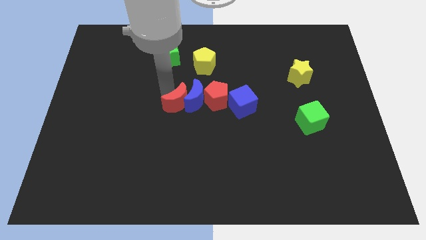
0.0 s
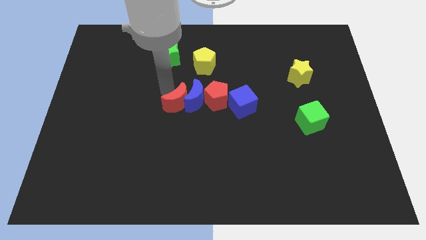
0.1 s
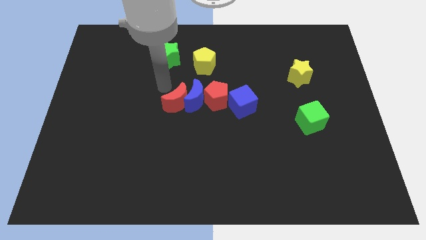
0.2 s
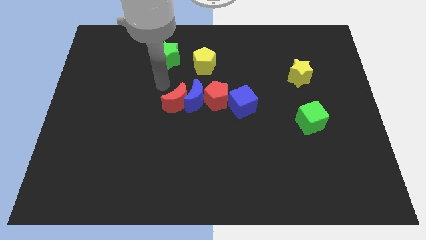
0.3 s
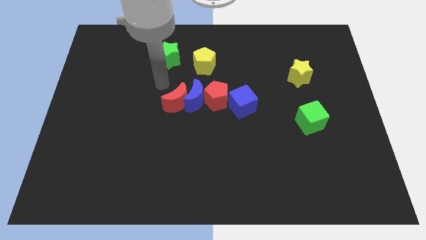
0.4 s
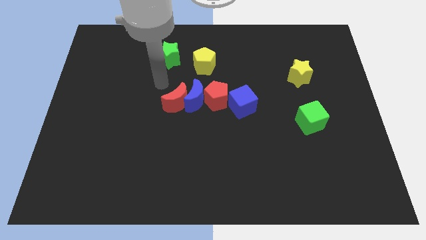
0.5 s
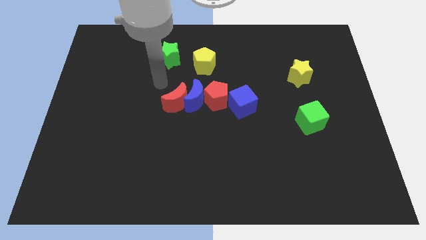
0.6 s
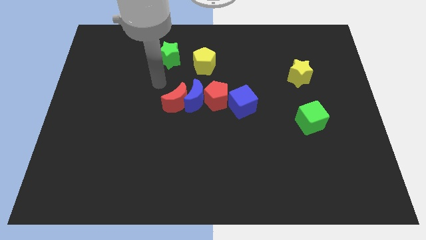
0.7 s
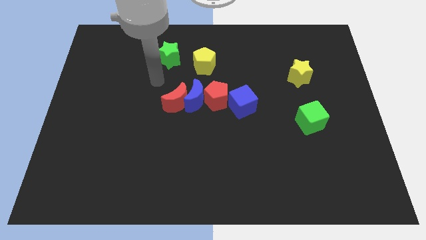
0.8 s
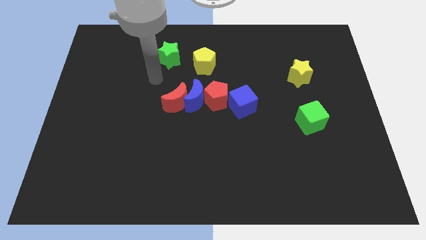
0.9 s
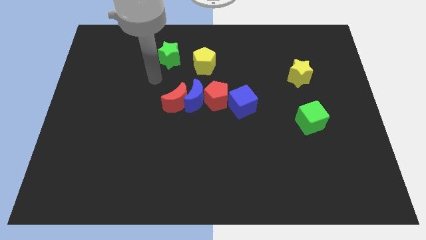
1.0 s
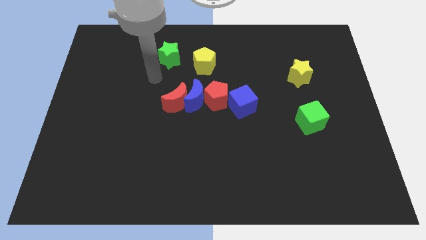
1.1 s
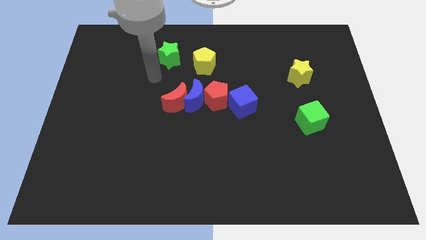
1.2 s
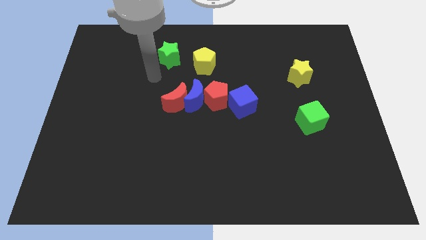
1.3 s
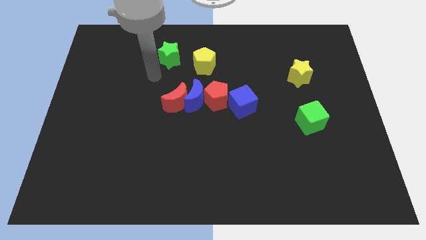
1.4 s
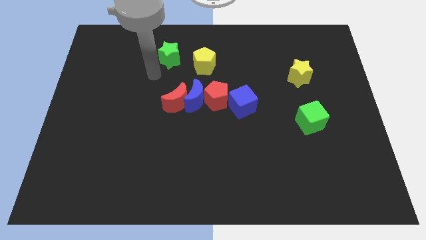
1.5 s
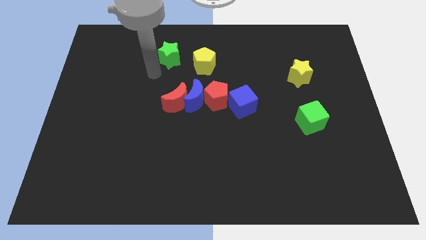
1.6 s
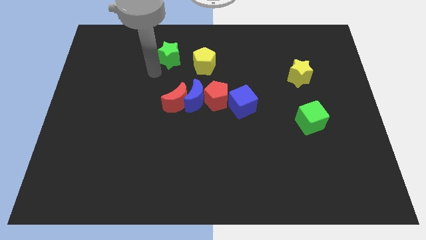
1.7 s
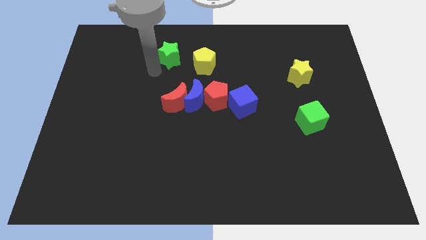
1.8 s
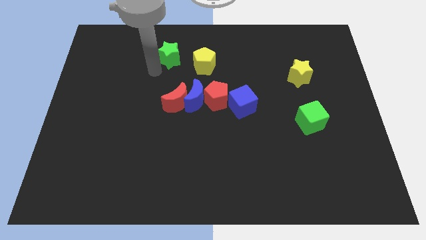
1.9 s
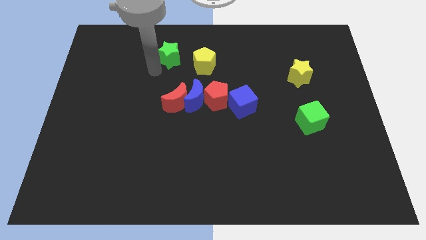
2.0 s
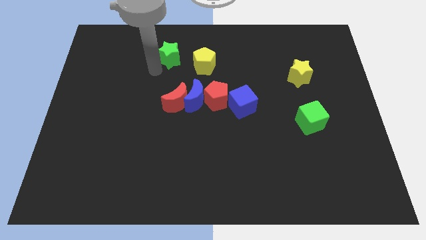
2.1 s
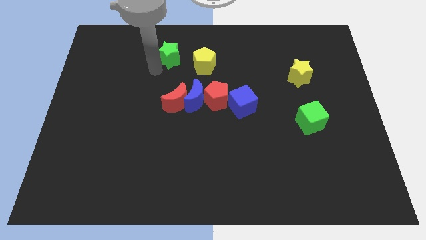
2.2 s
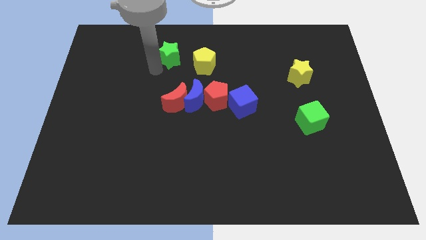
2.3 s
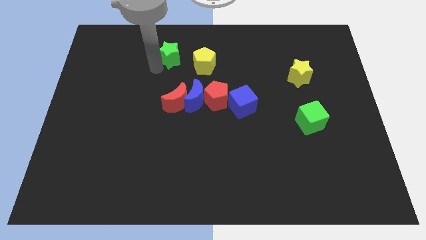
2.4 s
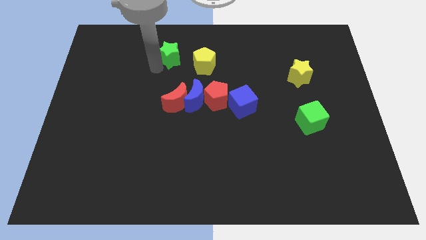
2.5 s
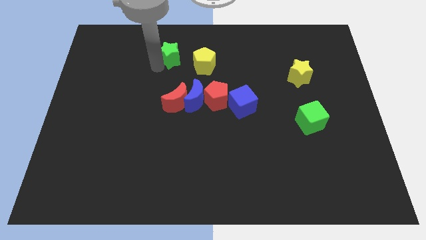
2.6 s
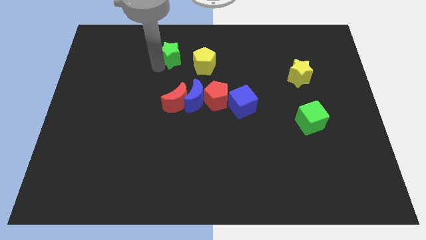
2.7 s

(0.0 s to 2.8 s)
move your arm and point towards green star

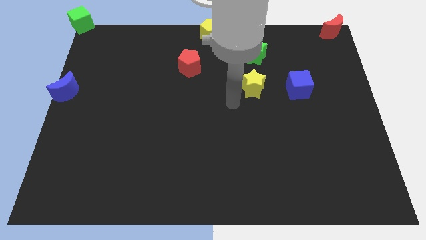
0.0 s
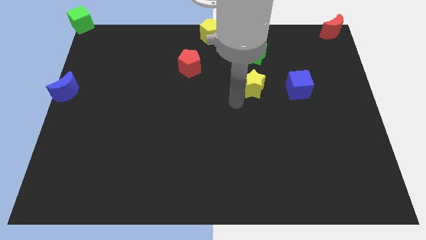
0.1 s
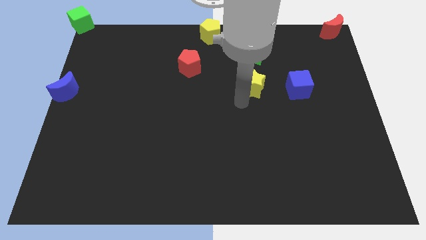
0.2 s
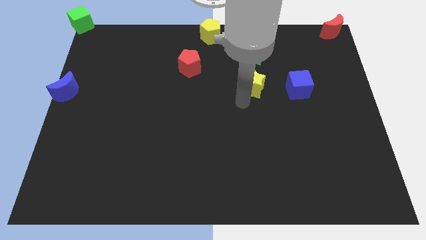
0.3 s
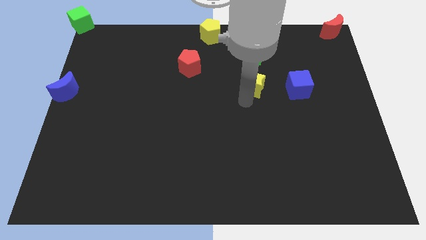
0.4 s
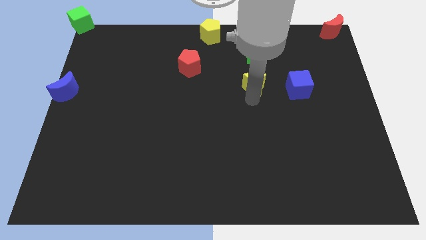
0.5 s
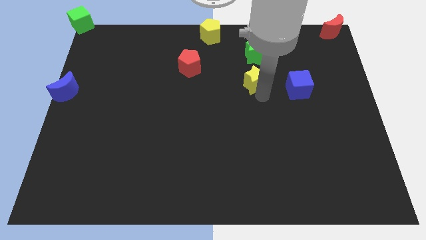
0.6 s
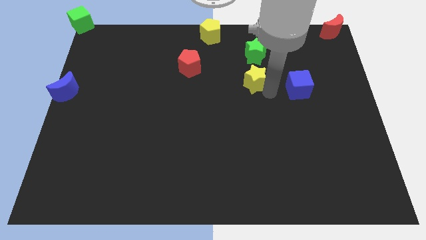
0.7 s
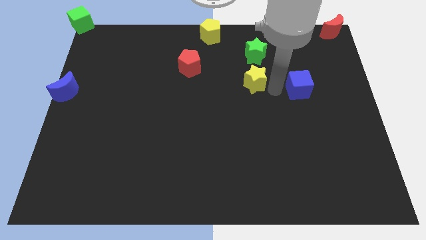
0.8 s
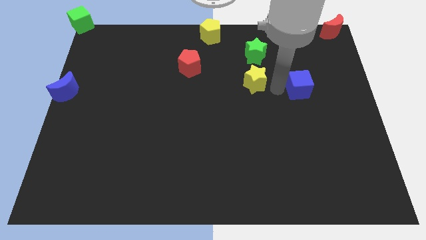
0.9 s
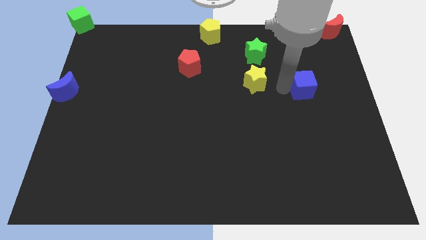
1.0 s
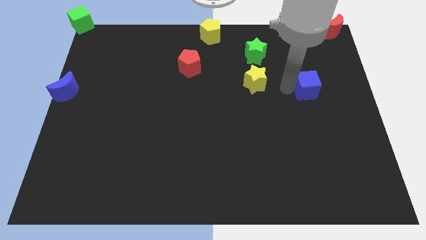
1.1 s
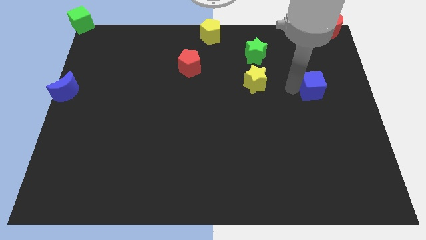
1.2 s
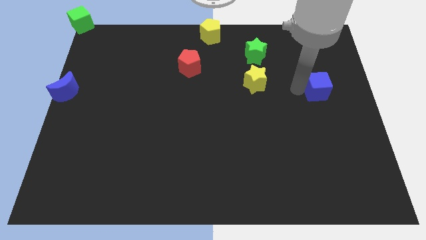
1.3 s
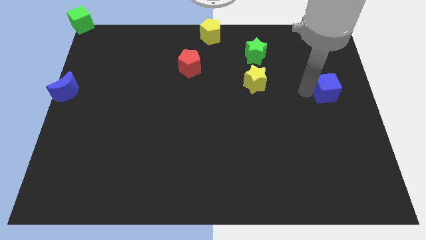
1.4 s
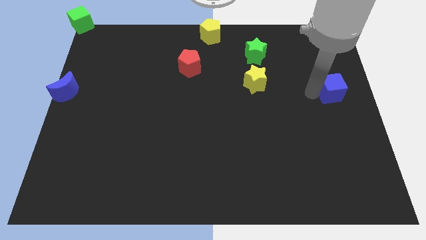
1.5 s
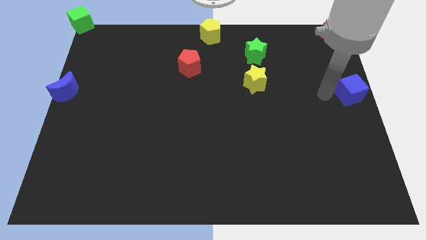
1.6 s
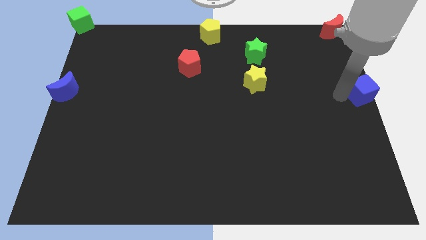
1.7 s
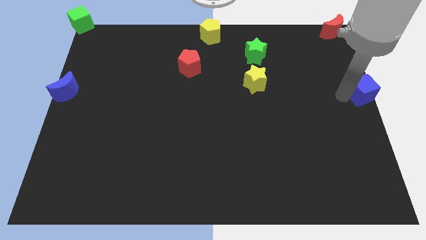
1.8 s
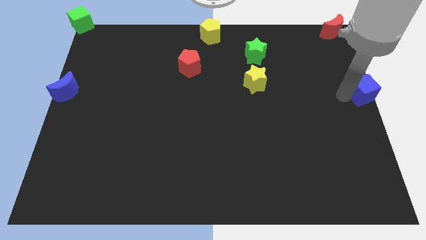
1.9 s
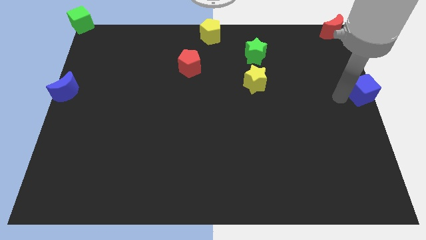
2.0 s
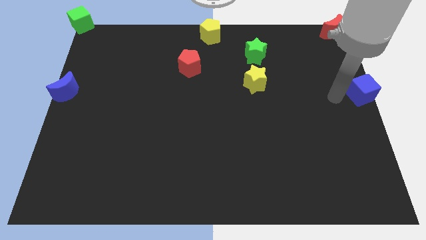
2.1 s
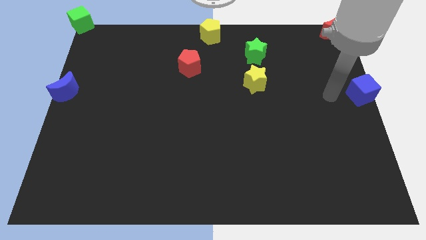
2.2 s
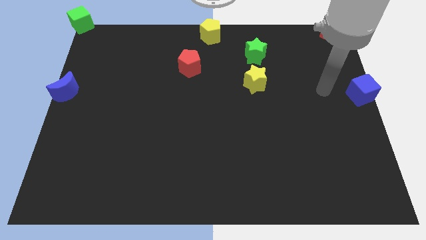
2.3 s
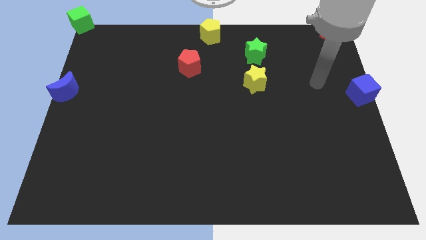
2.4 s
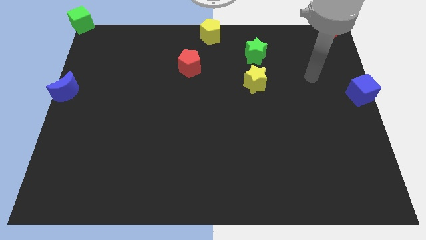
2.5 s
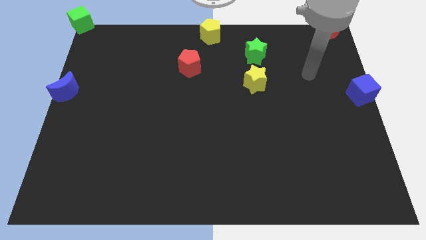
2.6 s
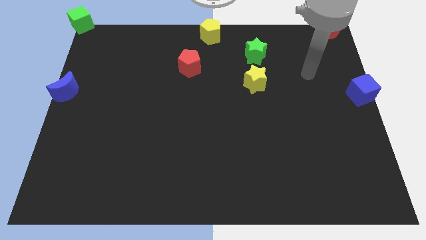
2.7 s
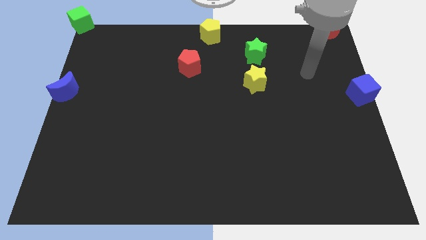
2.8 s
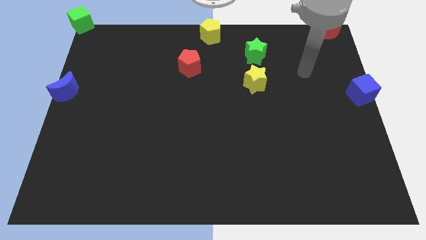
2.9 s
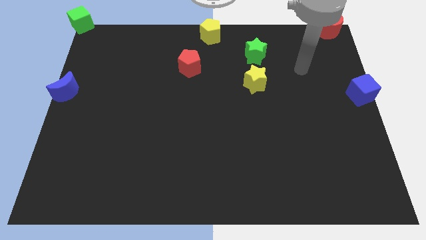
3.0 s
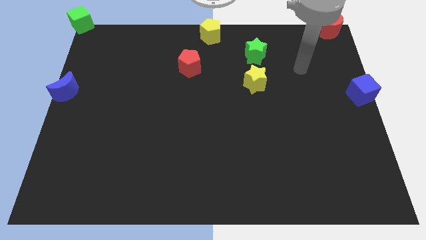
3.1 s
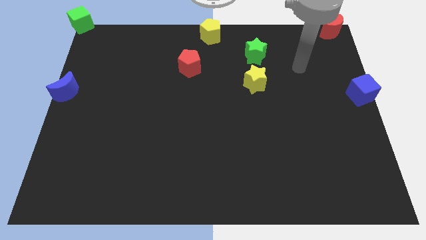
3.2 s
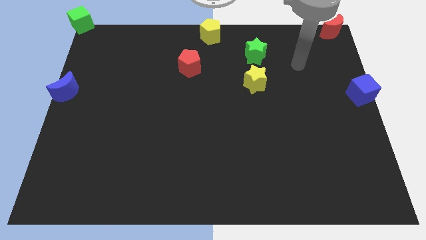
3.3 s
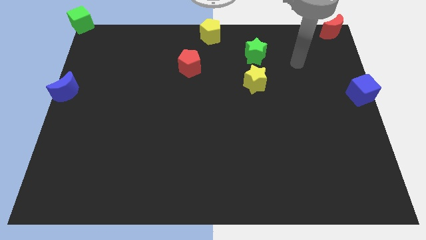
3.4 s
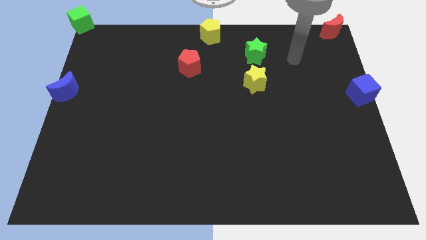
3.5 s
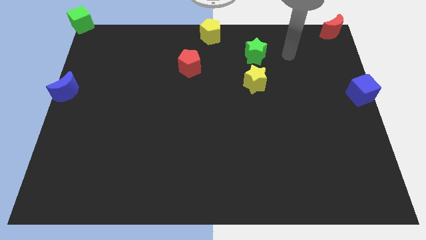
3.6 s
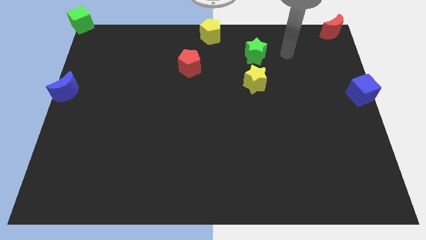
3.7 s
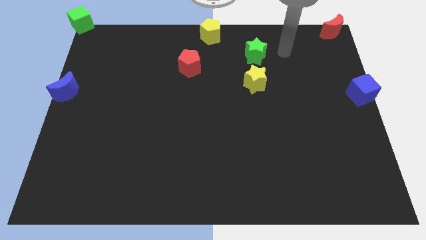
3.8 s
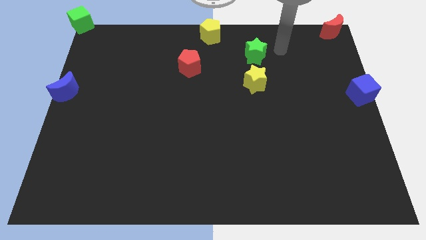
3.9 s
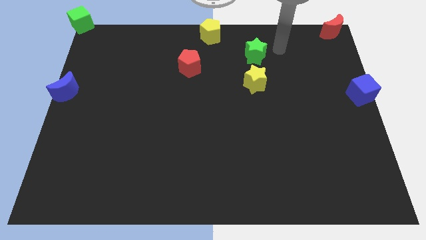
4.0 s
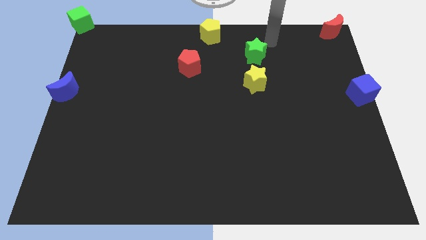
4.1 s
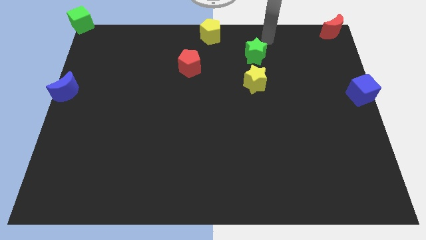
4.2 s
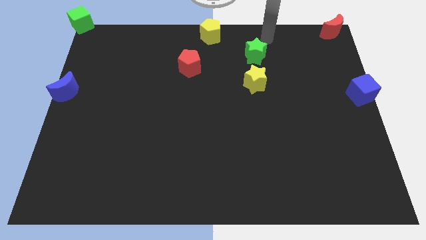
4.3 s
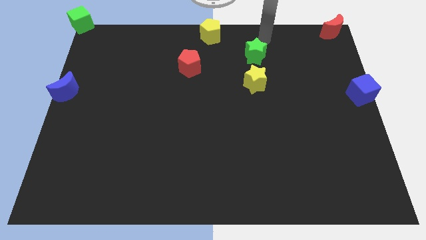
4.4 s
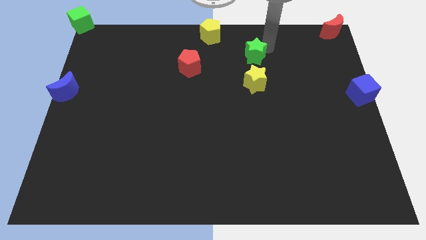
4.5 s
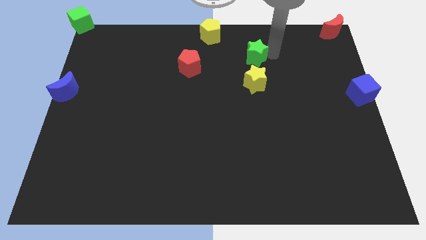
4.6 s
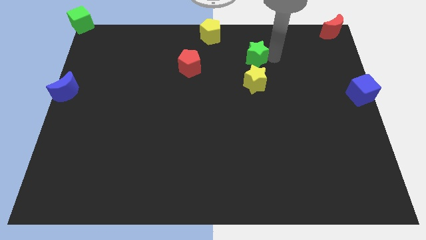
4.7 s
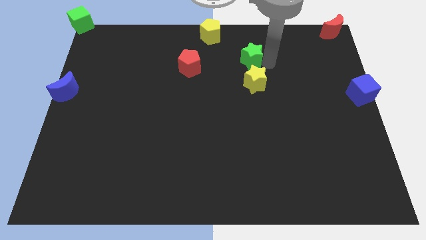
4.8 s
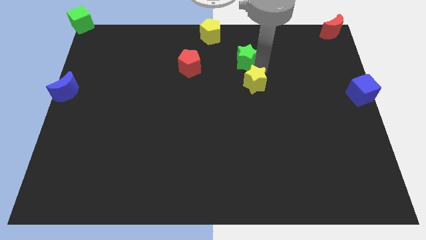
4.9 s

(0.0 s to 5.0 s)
slide the blue cube underneath the red moon

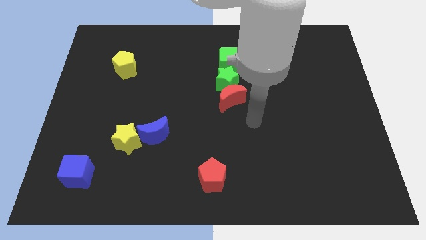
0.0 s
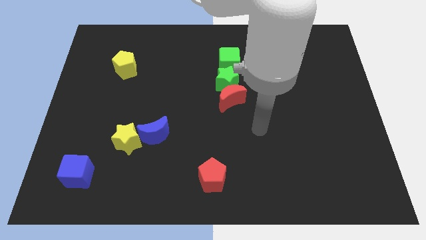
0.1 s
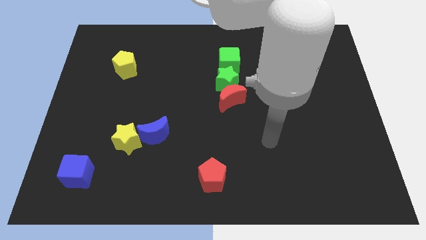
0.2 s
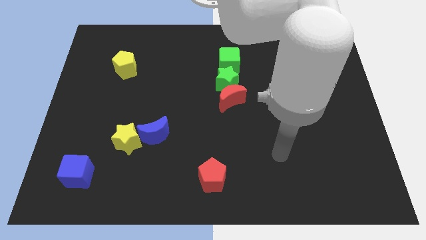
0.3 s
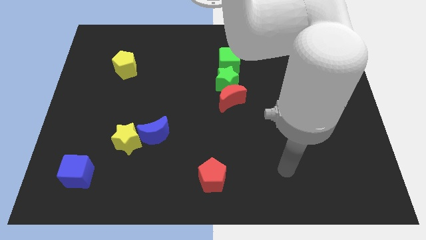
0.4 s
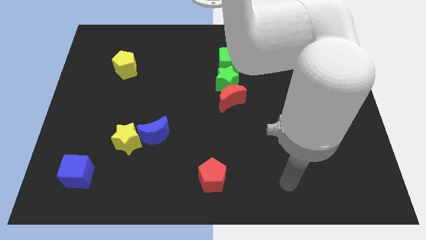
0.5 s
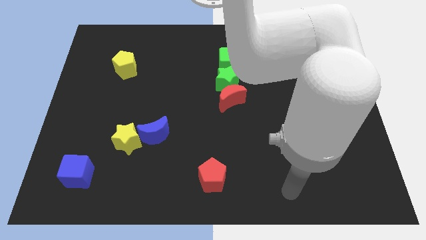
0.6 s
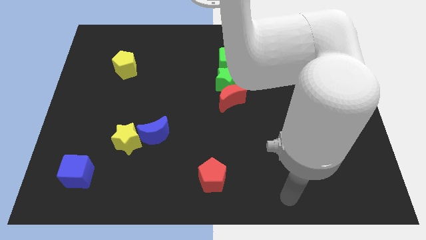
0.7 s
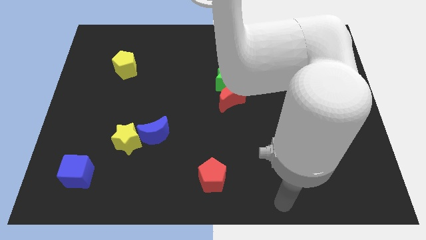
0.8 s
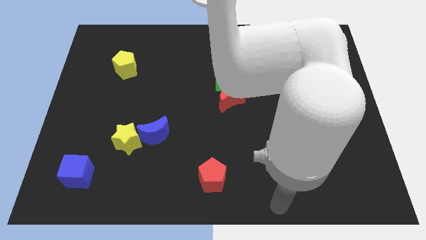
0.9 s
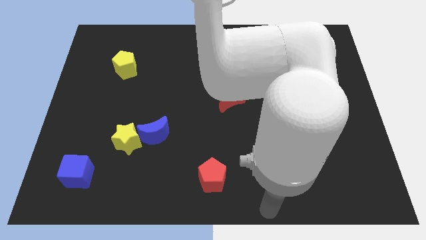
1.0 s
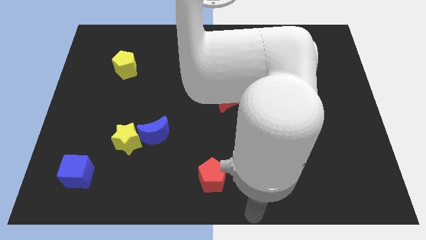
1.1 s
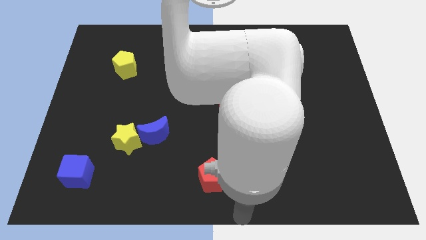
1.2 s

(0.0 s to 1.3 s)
point your arm at the bottom right side of the red pentagon
